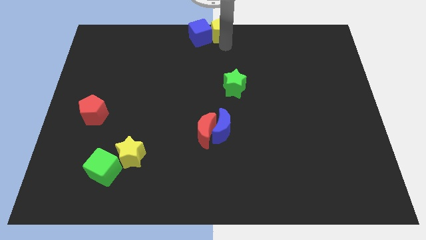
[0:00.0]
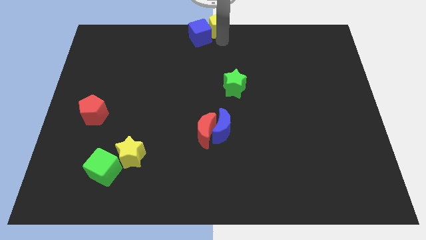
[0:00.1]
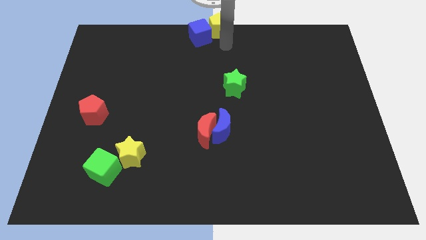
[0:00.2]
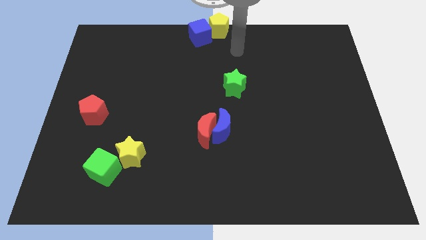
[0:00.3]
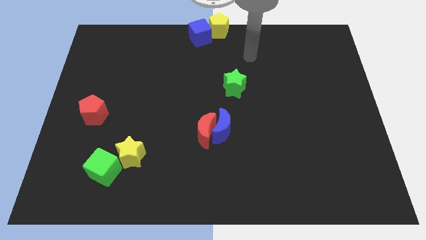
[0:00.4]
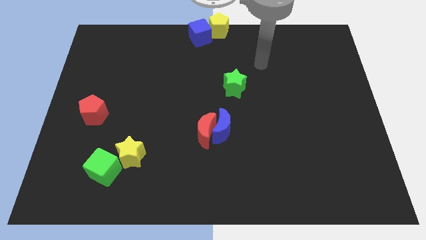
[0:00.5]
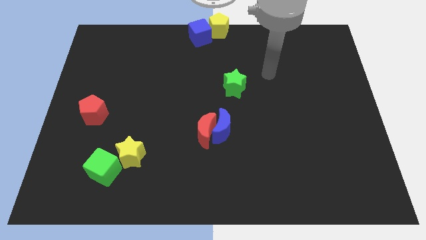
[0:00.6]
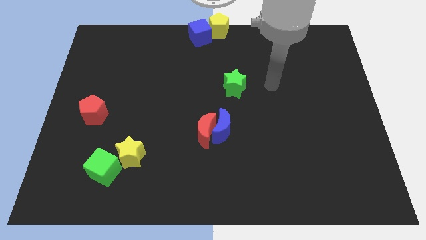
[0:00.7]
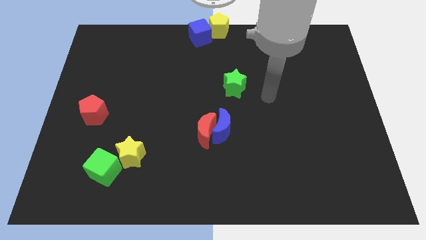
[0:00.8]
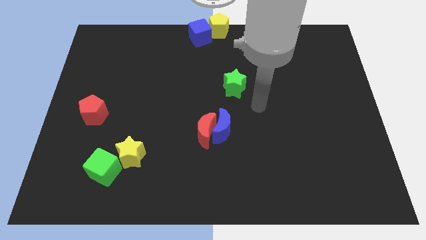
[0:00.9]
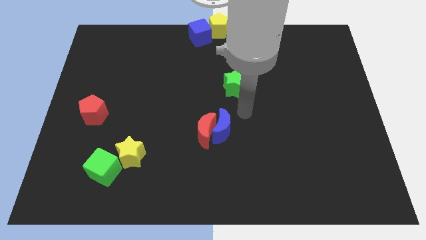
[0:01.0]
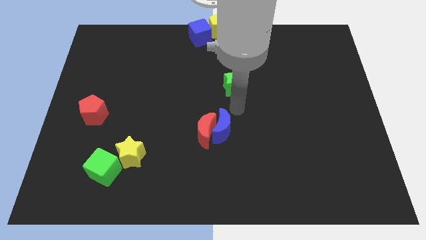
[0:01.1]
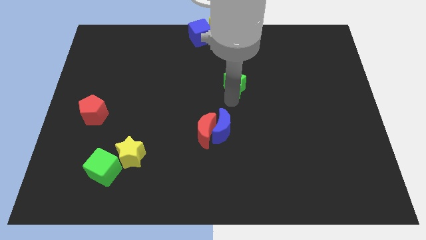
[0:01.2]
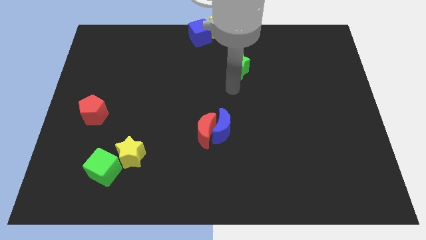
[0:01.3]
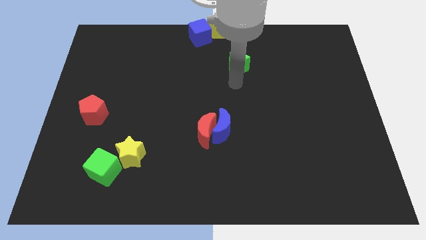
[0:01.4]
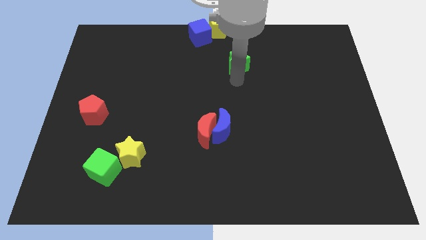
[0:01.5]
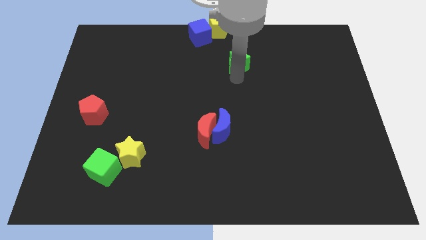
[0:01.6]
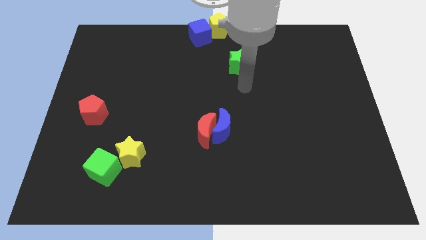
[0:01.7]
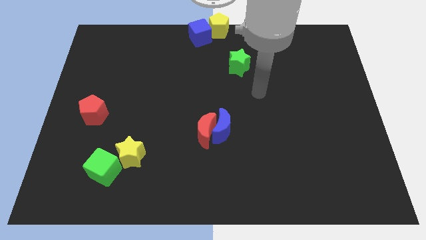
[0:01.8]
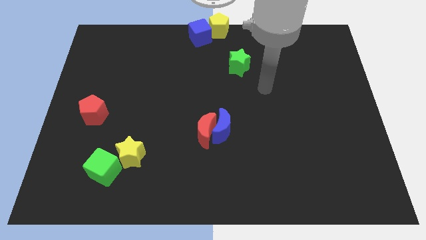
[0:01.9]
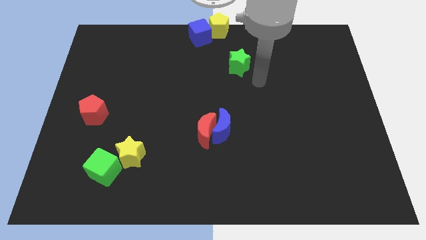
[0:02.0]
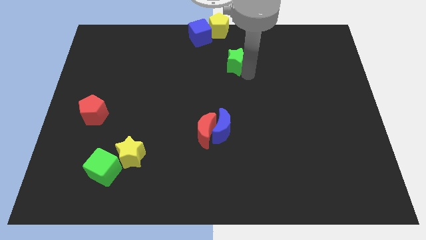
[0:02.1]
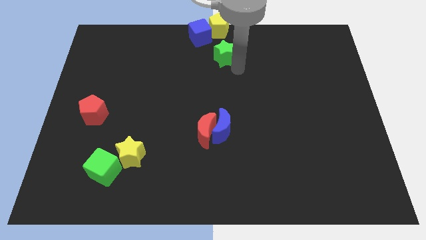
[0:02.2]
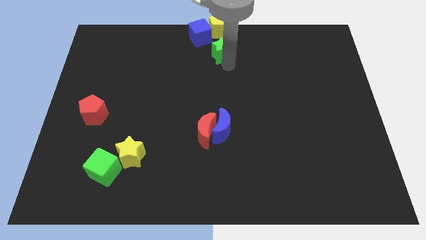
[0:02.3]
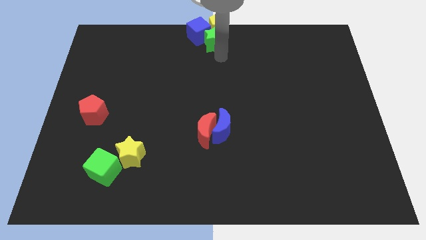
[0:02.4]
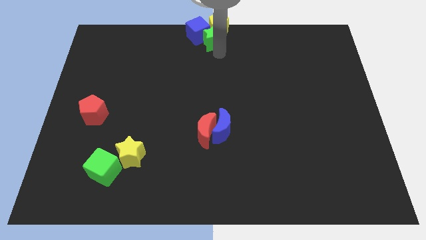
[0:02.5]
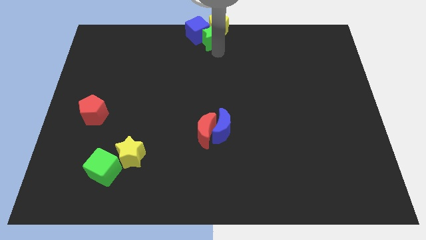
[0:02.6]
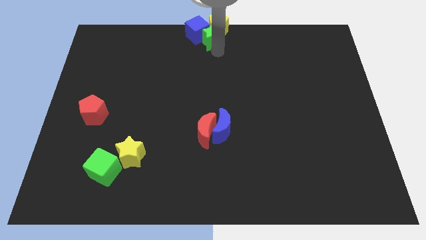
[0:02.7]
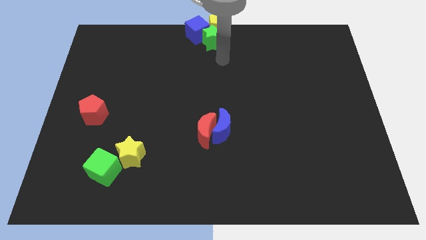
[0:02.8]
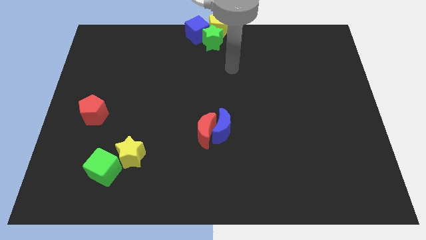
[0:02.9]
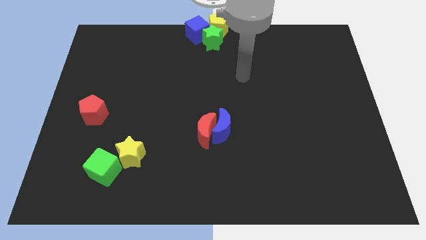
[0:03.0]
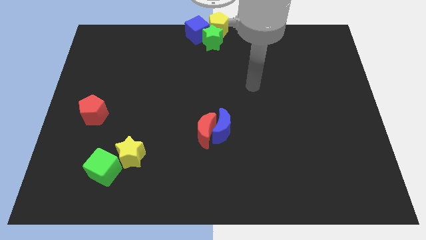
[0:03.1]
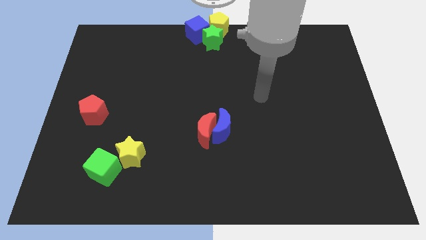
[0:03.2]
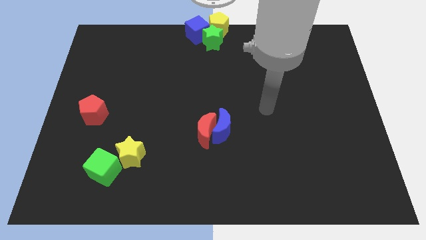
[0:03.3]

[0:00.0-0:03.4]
push the green star below the yellow pentagon

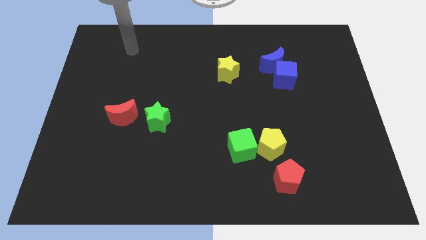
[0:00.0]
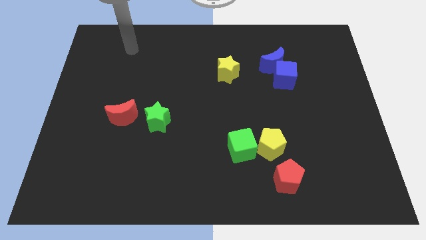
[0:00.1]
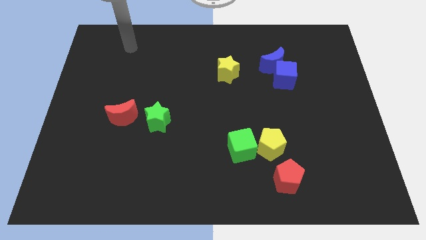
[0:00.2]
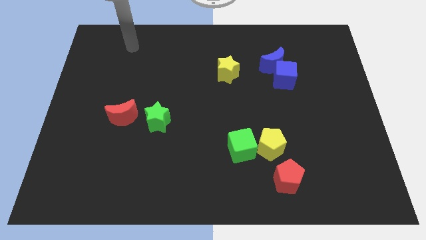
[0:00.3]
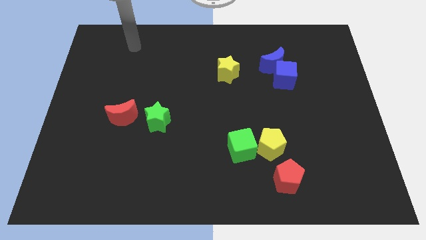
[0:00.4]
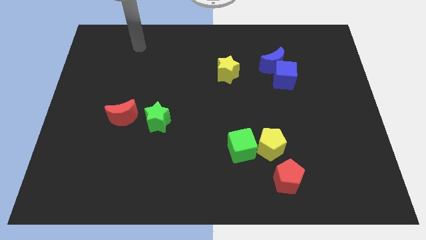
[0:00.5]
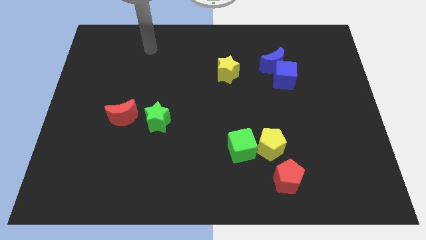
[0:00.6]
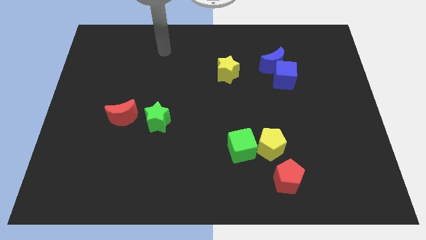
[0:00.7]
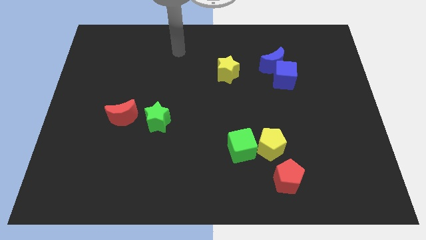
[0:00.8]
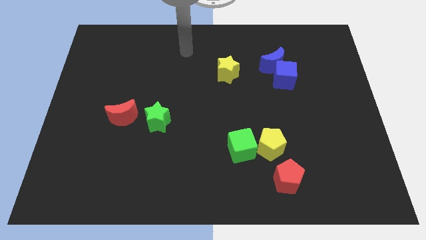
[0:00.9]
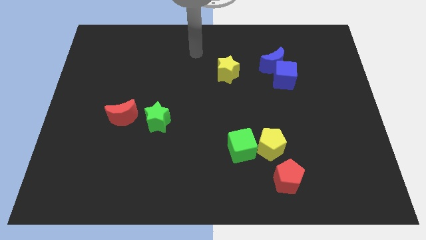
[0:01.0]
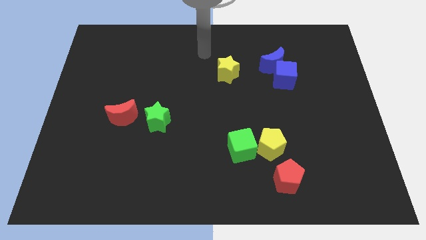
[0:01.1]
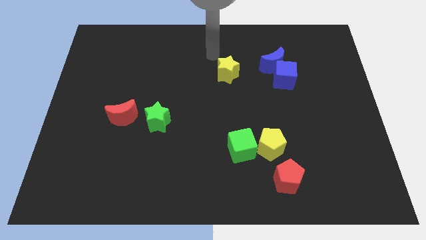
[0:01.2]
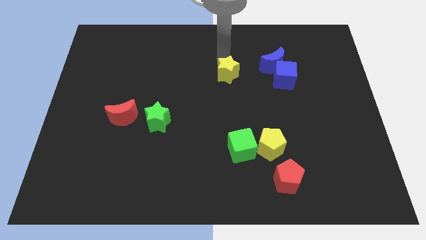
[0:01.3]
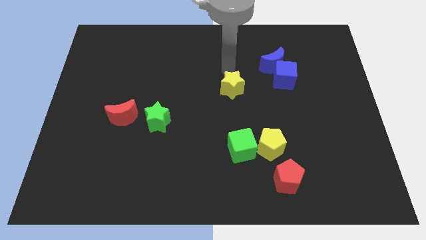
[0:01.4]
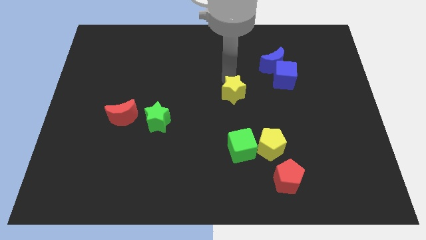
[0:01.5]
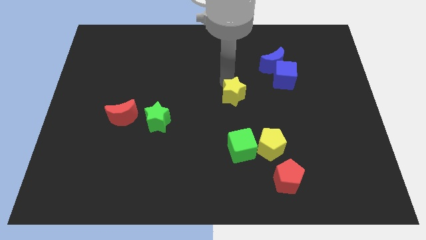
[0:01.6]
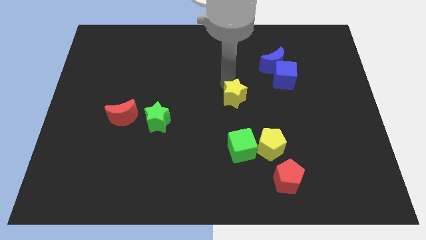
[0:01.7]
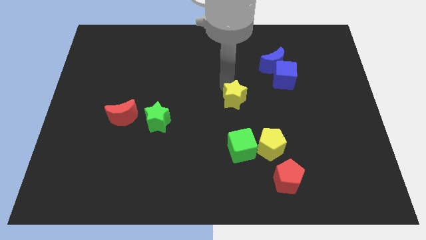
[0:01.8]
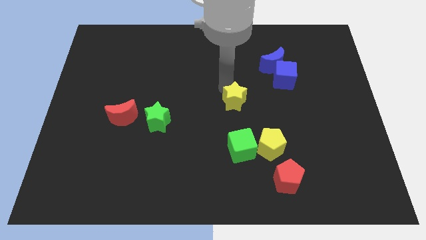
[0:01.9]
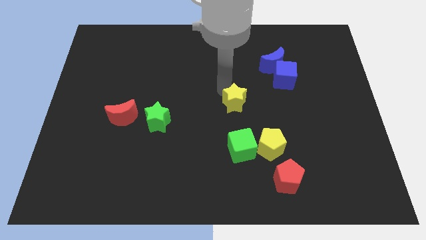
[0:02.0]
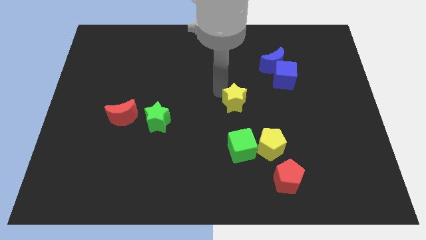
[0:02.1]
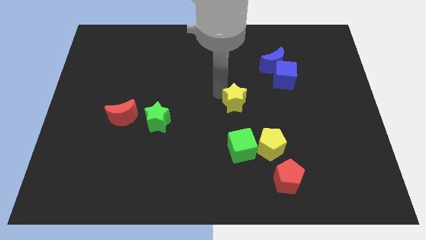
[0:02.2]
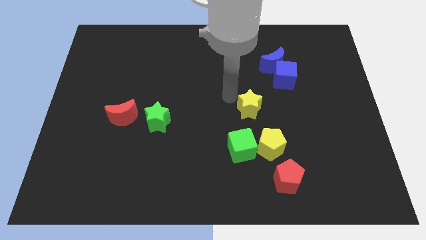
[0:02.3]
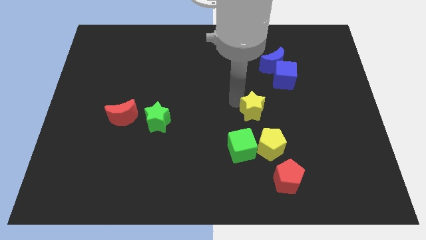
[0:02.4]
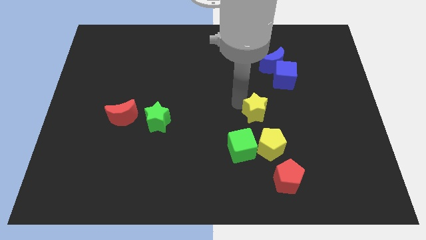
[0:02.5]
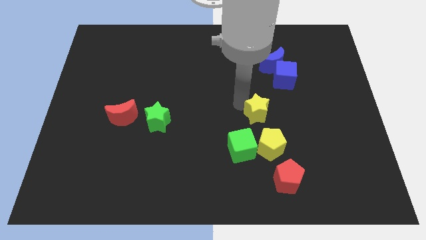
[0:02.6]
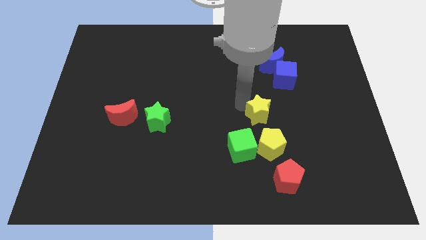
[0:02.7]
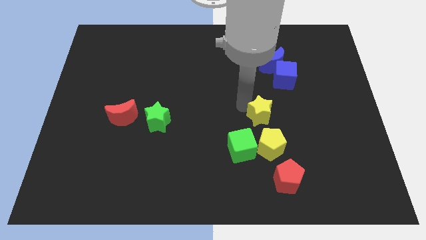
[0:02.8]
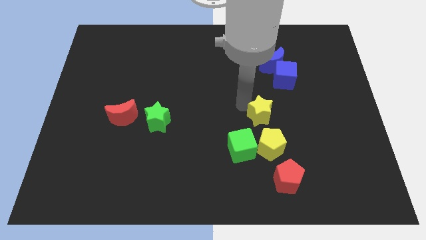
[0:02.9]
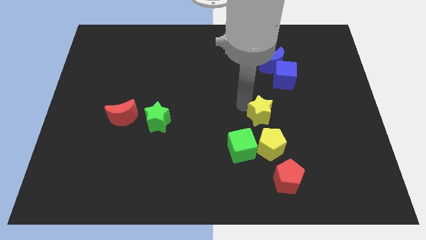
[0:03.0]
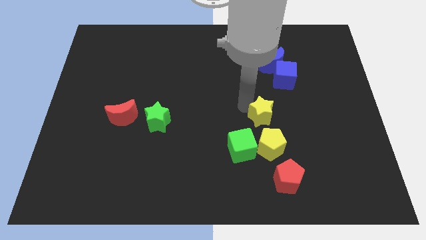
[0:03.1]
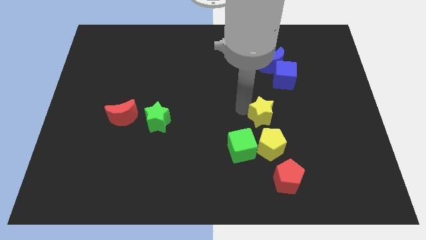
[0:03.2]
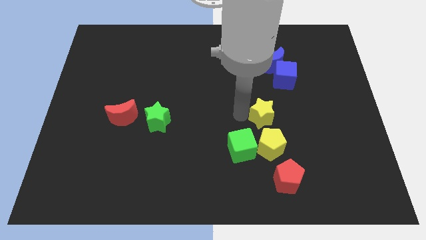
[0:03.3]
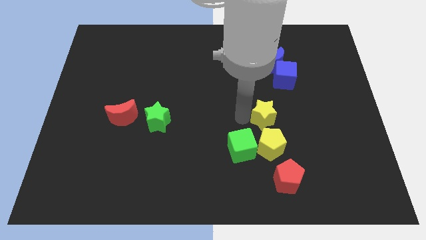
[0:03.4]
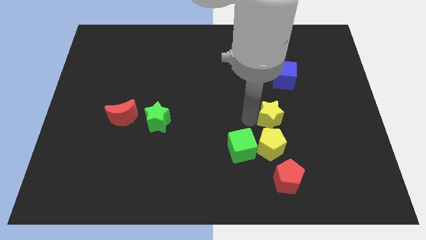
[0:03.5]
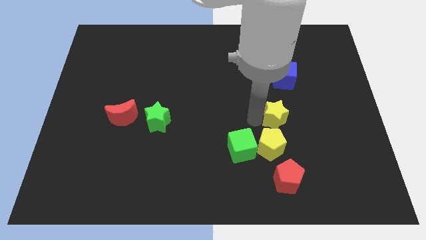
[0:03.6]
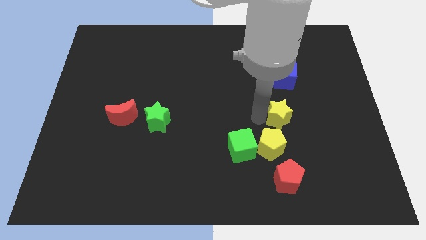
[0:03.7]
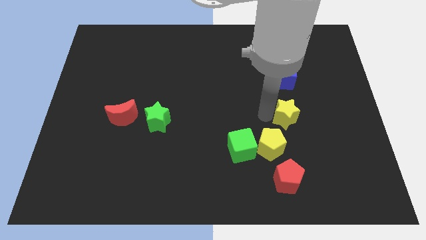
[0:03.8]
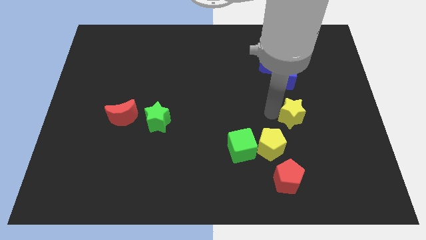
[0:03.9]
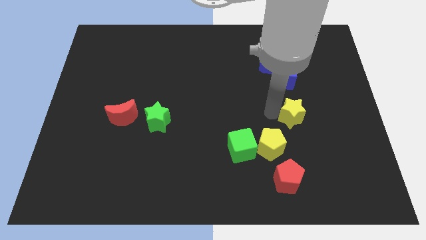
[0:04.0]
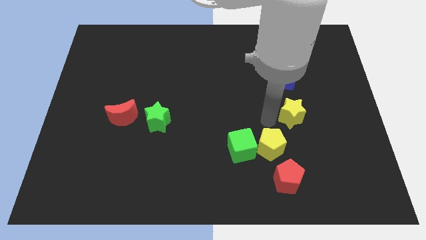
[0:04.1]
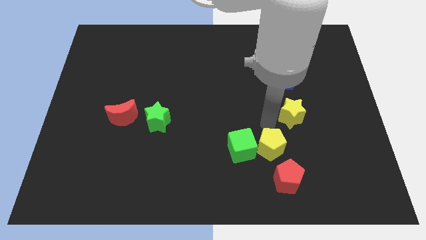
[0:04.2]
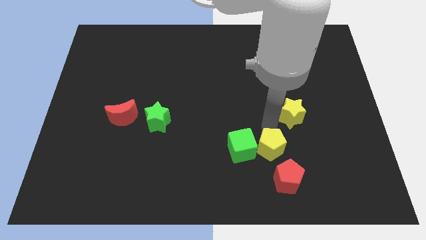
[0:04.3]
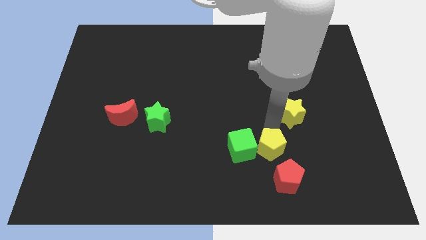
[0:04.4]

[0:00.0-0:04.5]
push the yellow star towards the right side

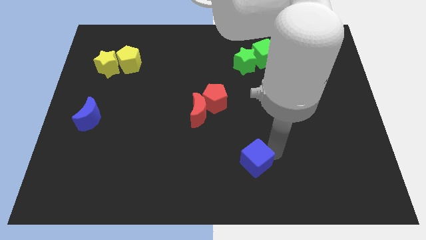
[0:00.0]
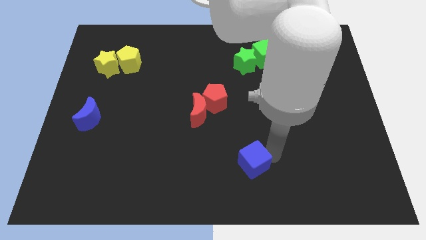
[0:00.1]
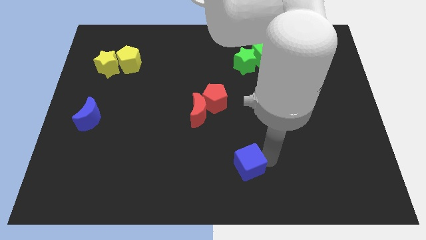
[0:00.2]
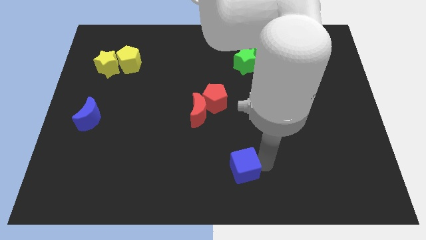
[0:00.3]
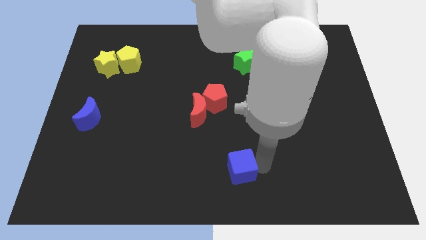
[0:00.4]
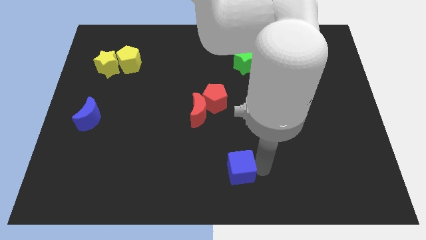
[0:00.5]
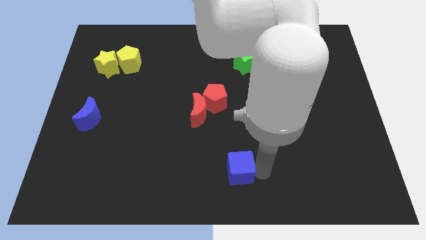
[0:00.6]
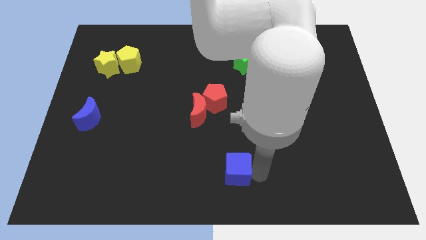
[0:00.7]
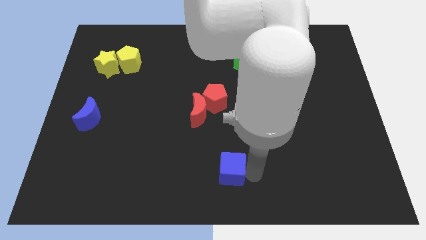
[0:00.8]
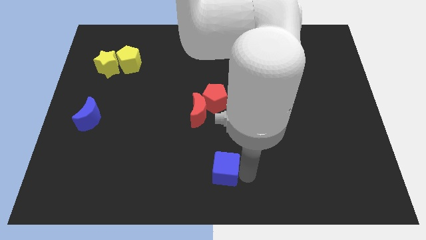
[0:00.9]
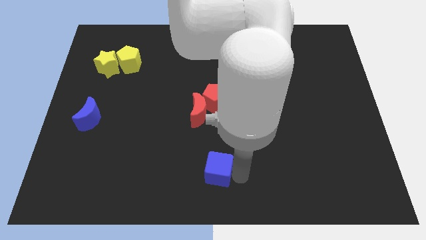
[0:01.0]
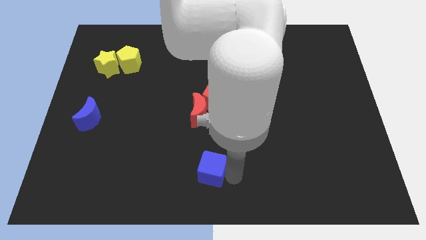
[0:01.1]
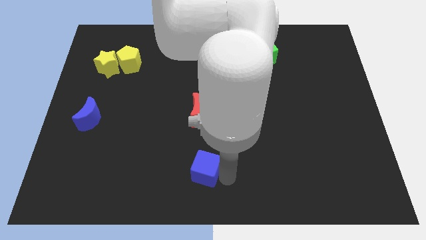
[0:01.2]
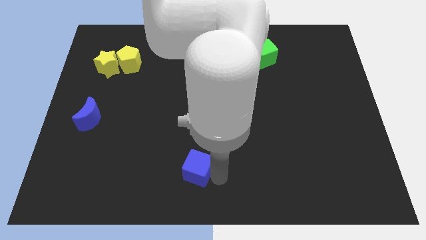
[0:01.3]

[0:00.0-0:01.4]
push blue cube to the parallel bottom of the red moon
